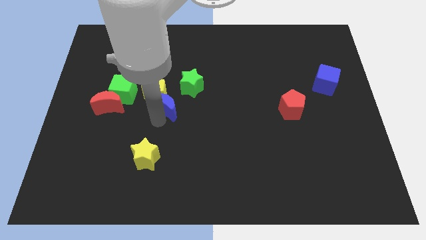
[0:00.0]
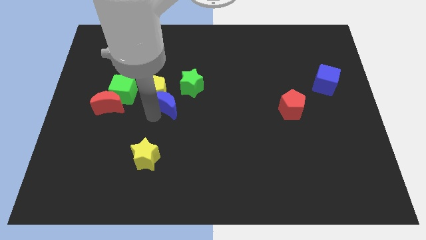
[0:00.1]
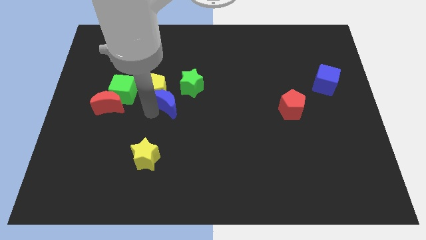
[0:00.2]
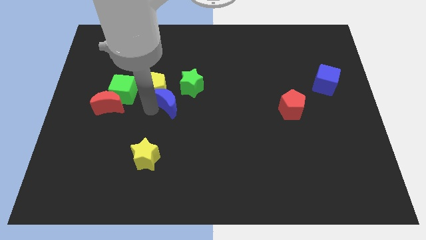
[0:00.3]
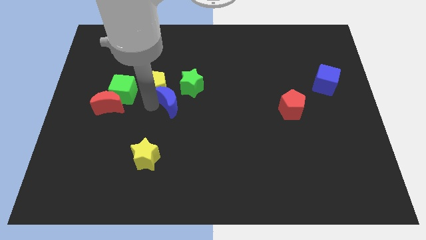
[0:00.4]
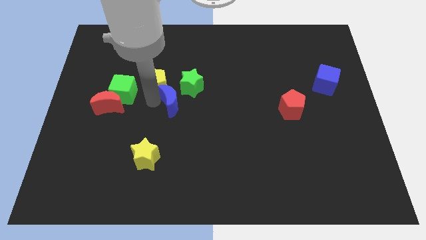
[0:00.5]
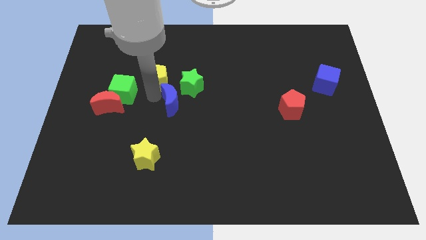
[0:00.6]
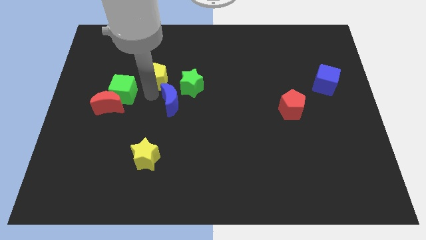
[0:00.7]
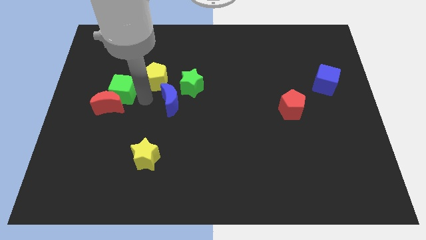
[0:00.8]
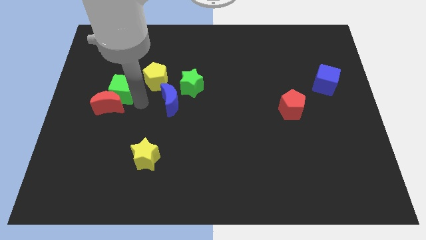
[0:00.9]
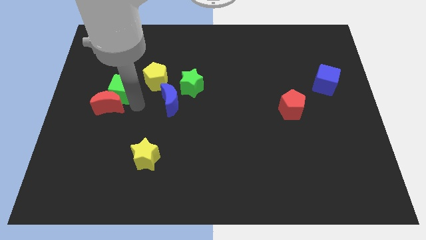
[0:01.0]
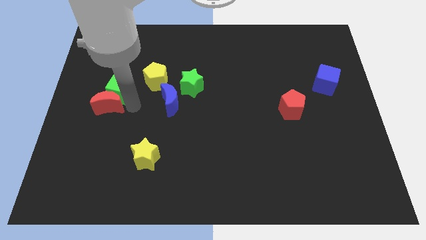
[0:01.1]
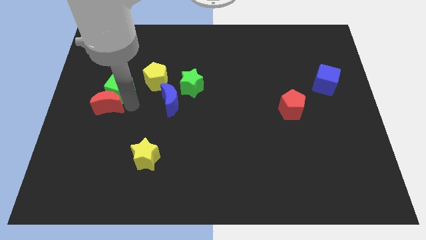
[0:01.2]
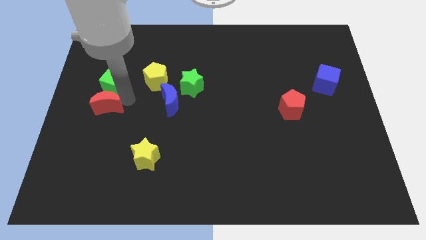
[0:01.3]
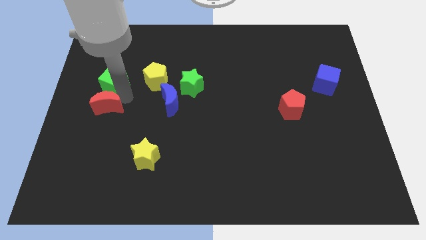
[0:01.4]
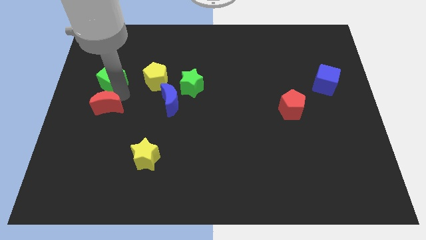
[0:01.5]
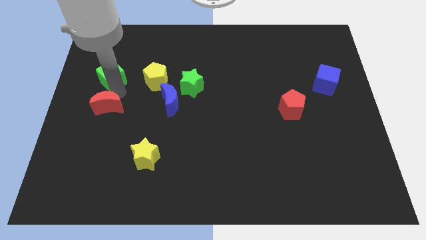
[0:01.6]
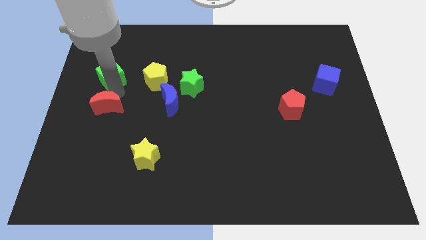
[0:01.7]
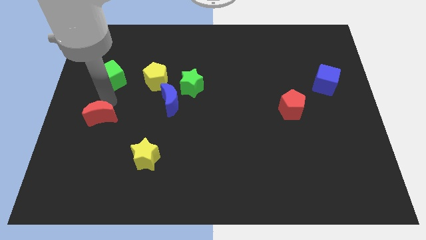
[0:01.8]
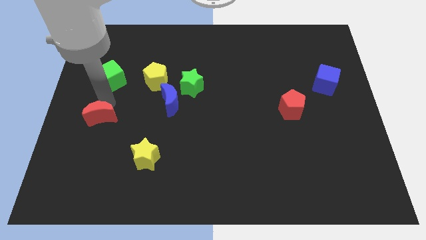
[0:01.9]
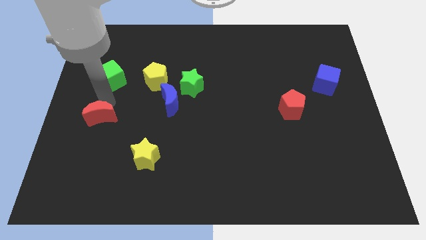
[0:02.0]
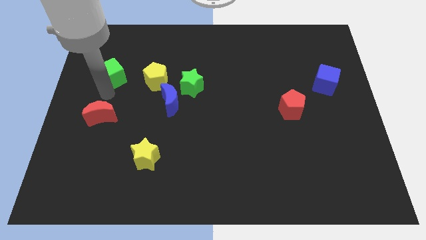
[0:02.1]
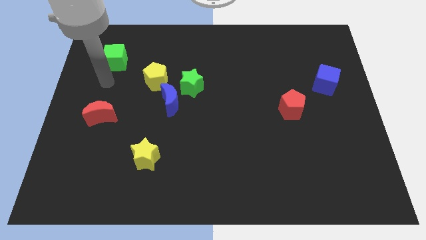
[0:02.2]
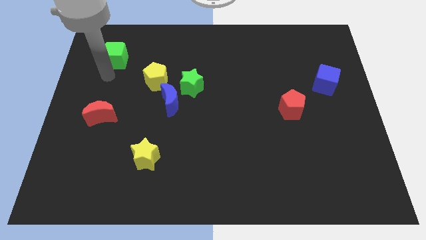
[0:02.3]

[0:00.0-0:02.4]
place green cube above red crescent

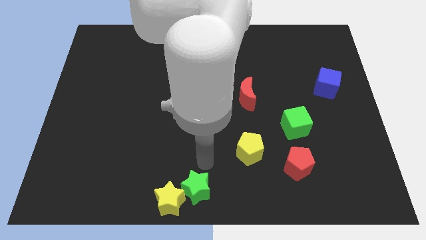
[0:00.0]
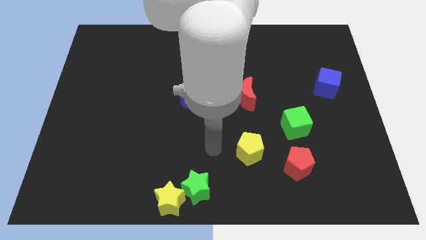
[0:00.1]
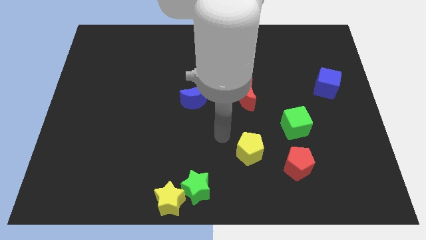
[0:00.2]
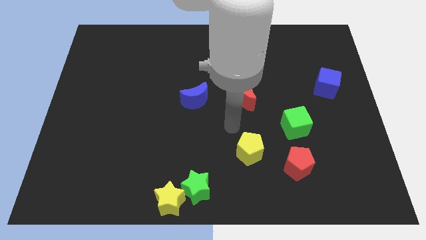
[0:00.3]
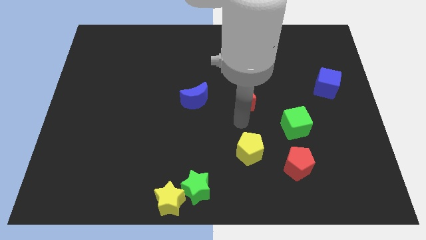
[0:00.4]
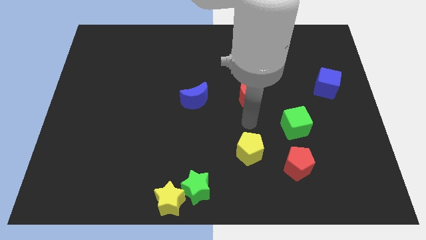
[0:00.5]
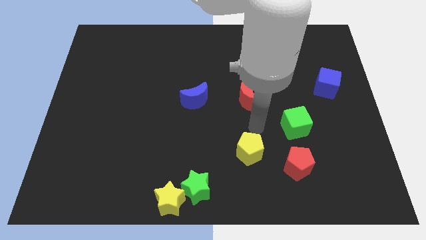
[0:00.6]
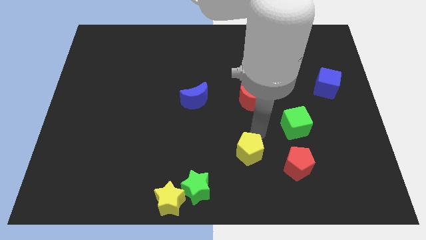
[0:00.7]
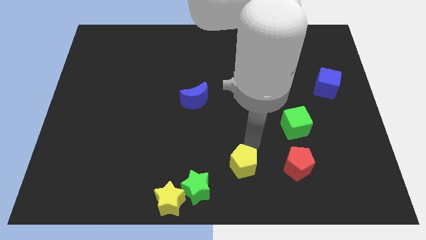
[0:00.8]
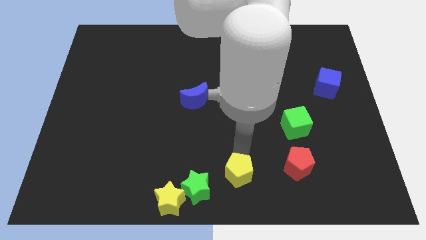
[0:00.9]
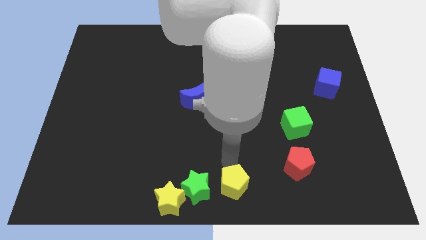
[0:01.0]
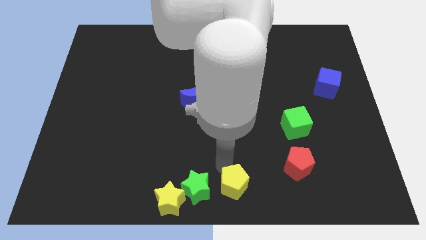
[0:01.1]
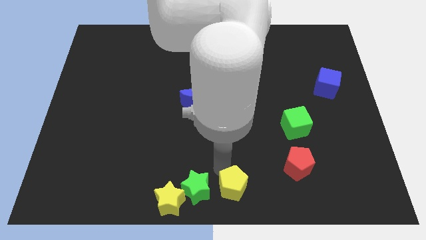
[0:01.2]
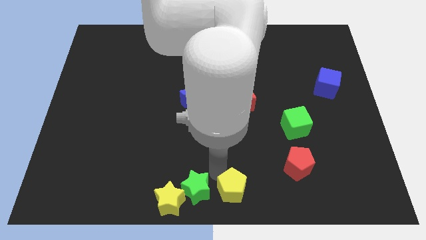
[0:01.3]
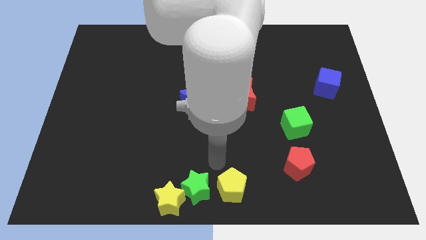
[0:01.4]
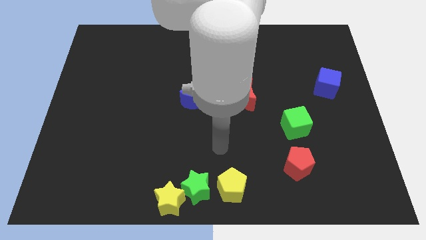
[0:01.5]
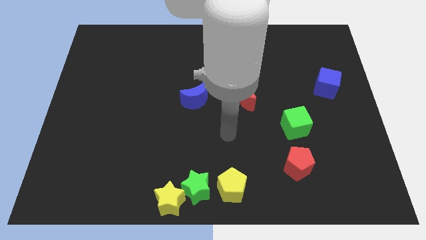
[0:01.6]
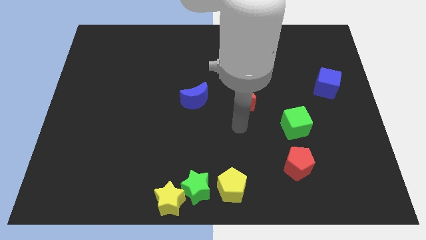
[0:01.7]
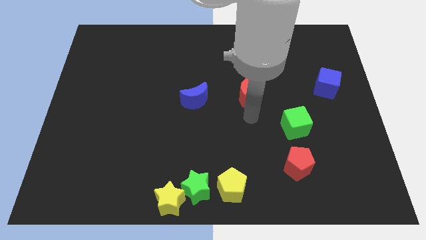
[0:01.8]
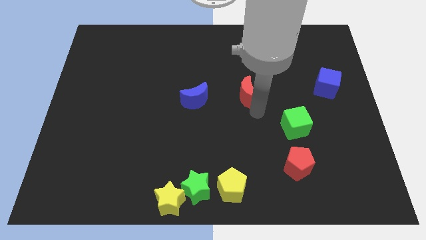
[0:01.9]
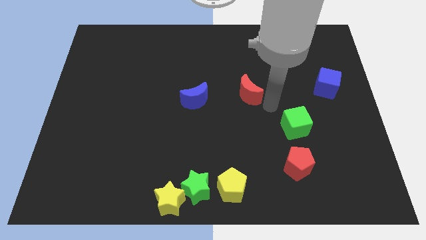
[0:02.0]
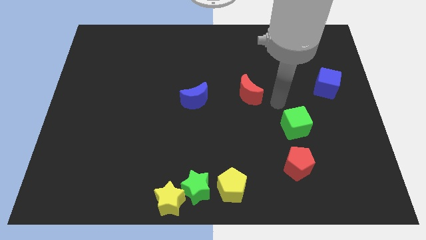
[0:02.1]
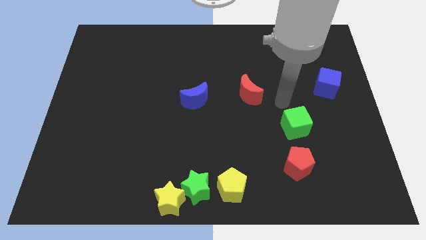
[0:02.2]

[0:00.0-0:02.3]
pull the yellow pentagon beside the green star

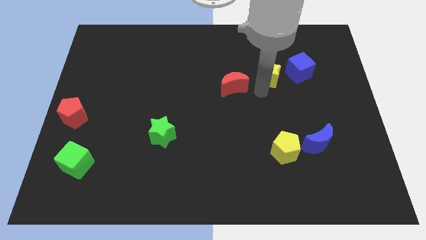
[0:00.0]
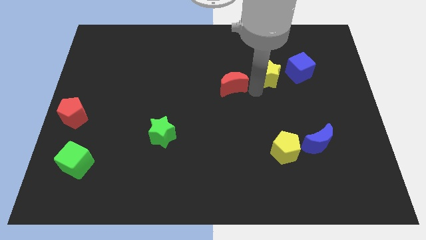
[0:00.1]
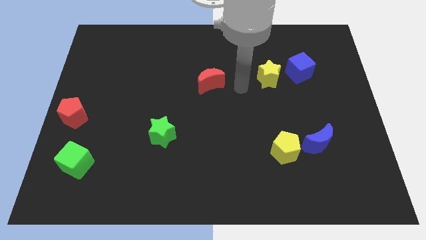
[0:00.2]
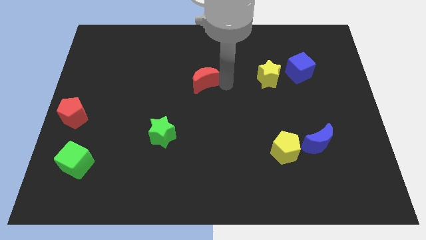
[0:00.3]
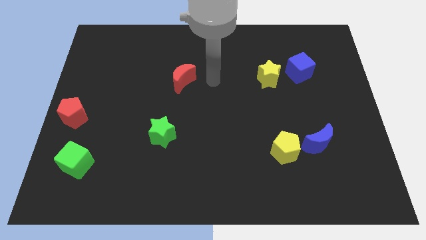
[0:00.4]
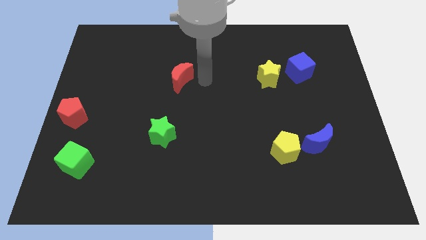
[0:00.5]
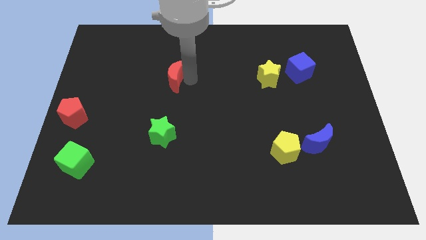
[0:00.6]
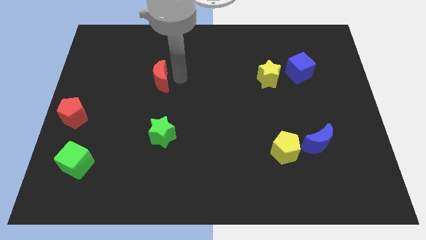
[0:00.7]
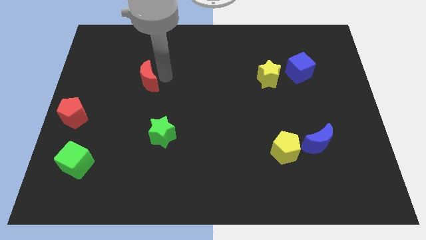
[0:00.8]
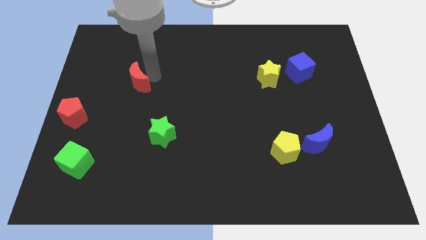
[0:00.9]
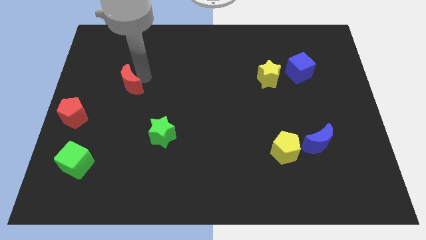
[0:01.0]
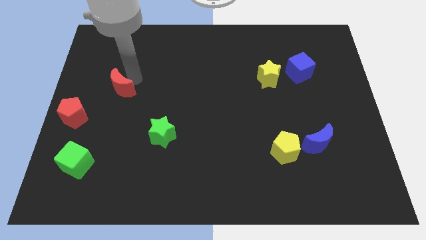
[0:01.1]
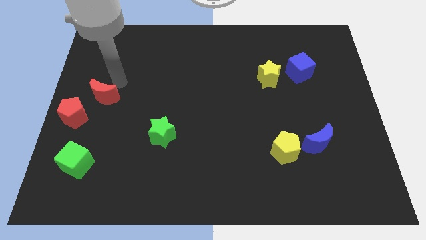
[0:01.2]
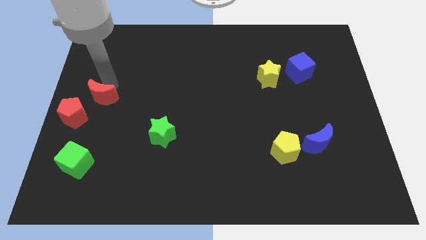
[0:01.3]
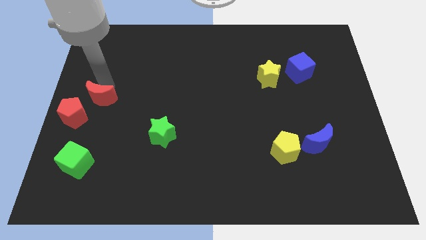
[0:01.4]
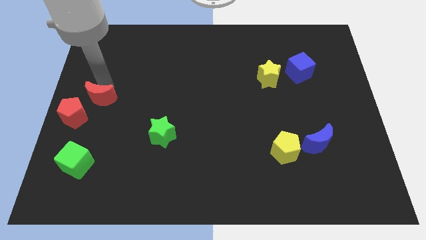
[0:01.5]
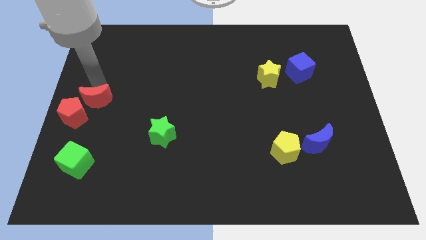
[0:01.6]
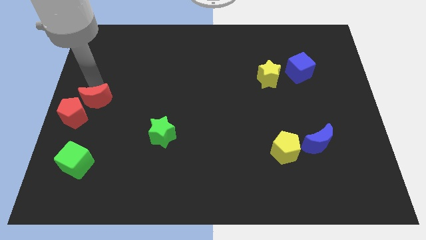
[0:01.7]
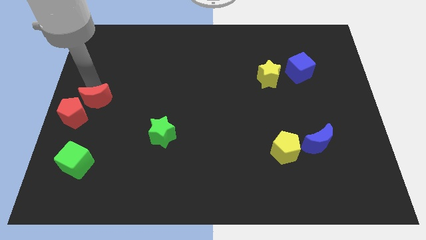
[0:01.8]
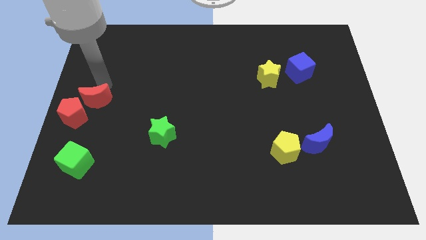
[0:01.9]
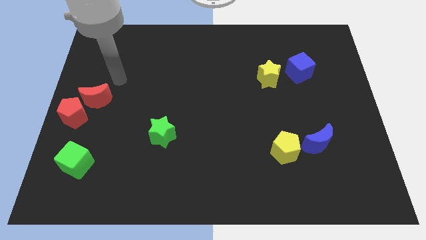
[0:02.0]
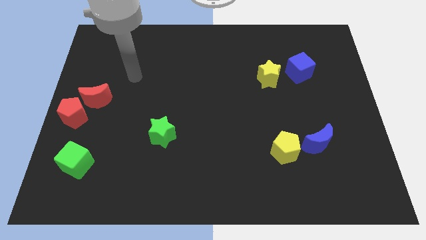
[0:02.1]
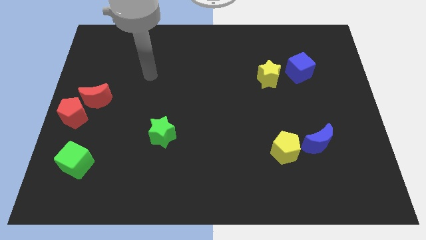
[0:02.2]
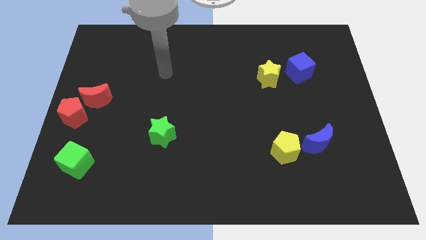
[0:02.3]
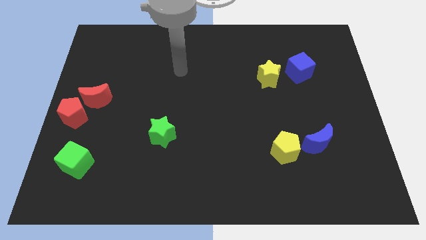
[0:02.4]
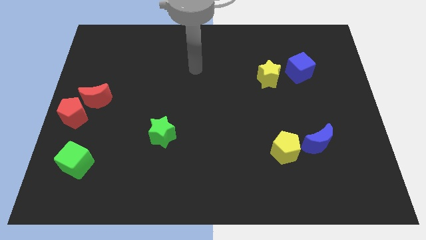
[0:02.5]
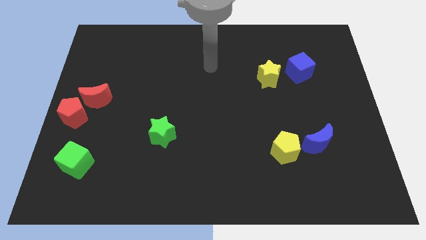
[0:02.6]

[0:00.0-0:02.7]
push the red moon towards the red pentagon

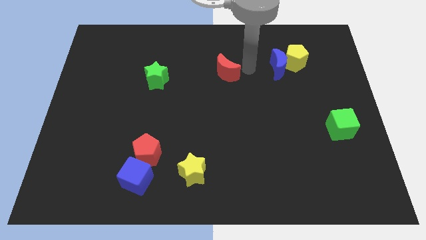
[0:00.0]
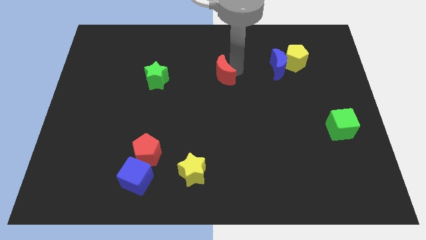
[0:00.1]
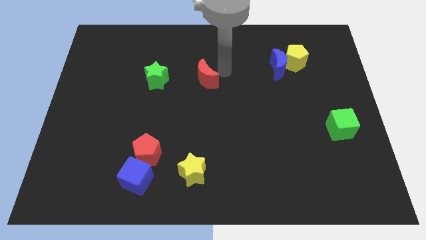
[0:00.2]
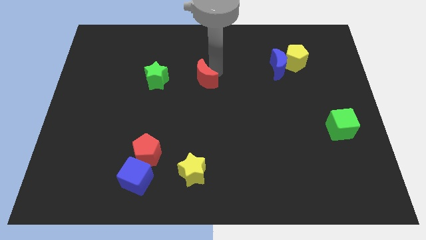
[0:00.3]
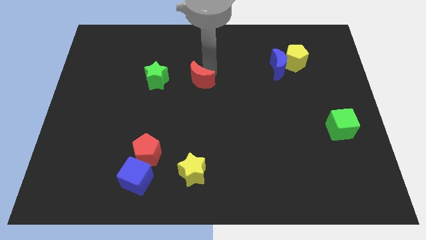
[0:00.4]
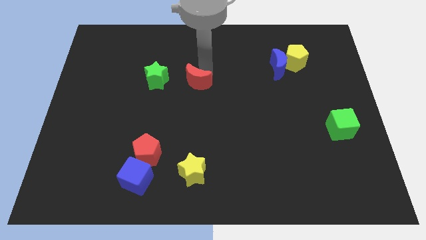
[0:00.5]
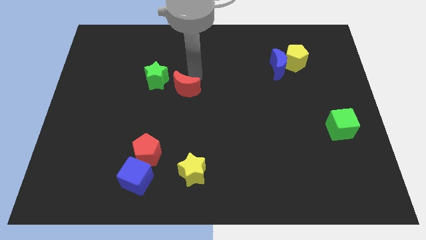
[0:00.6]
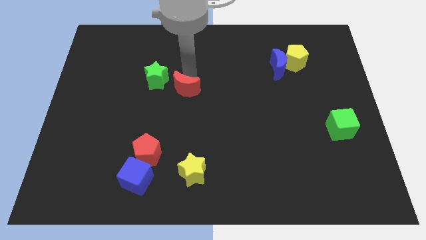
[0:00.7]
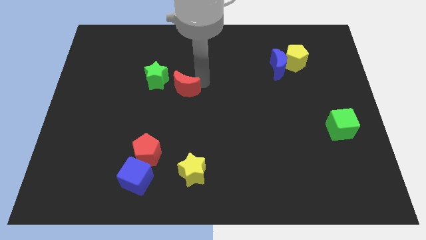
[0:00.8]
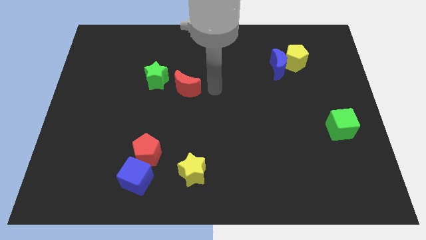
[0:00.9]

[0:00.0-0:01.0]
push the red crescent to the right of the green star

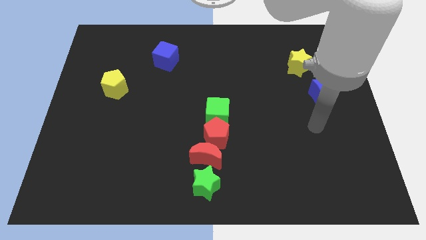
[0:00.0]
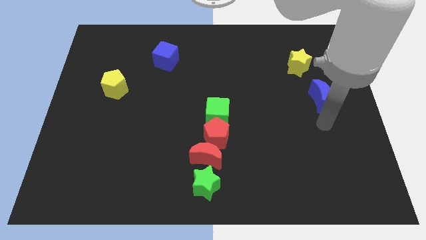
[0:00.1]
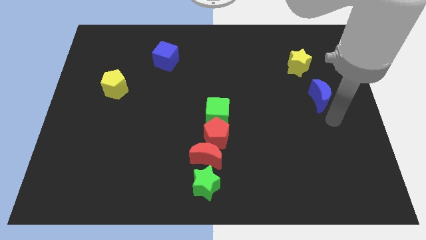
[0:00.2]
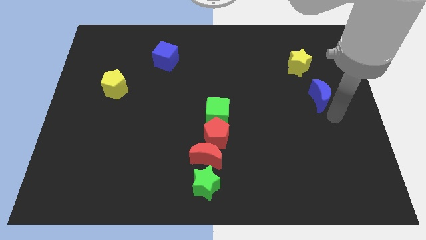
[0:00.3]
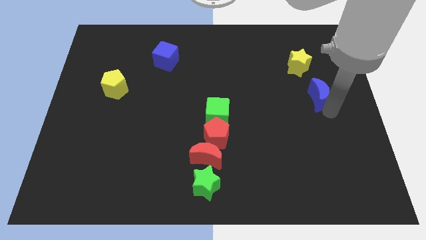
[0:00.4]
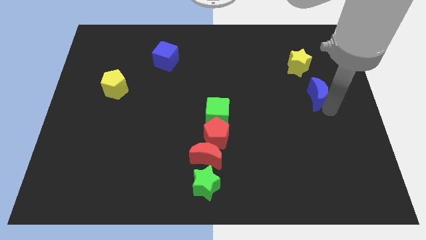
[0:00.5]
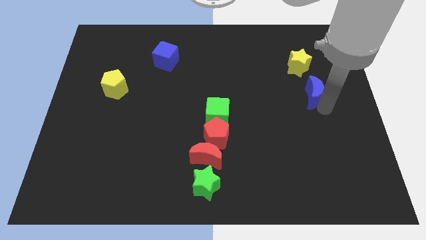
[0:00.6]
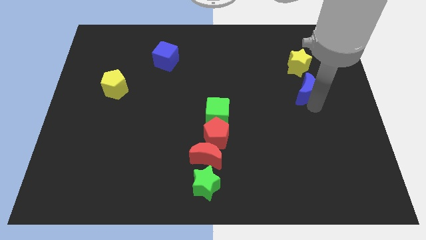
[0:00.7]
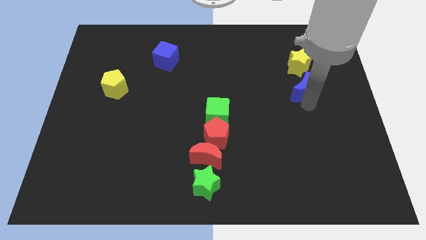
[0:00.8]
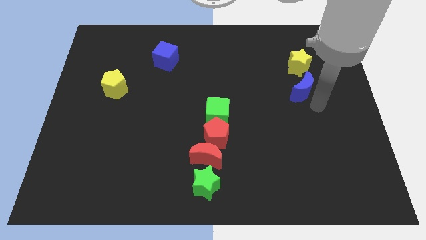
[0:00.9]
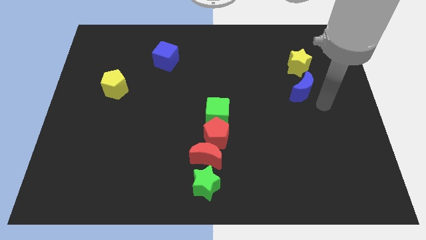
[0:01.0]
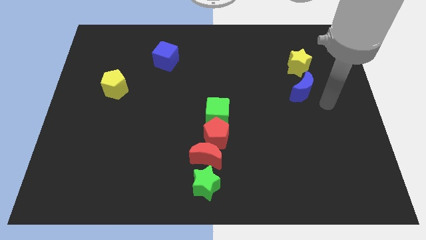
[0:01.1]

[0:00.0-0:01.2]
push blue moon slightly towards center
